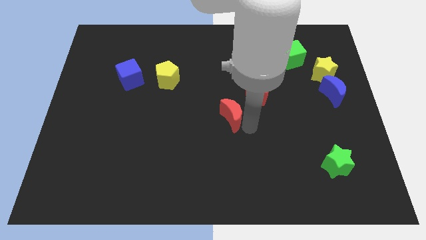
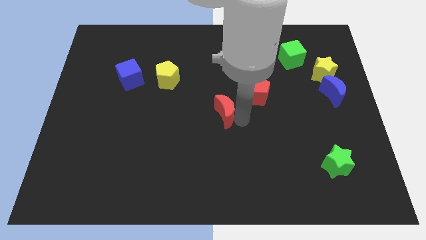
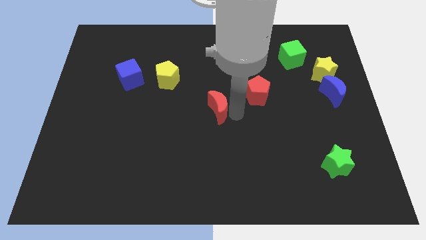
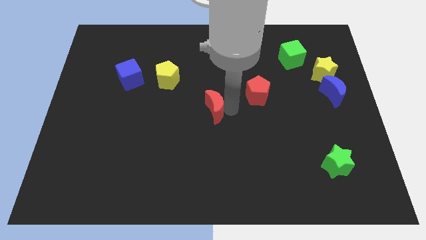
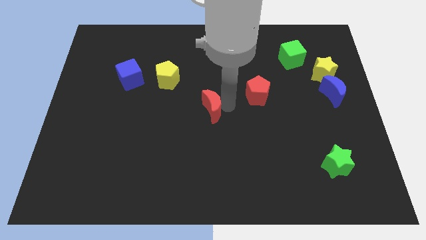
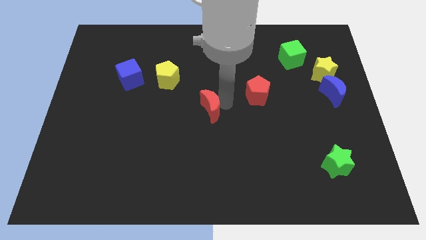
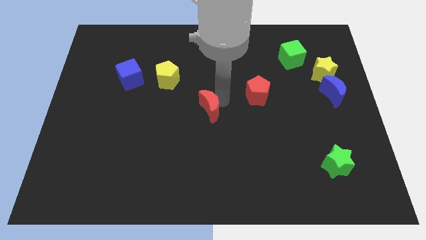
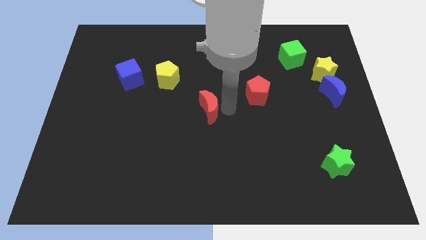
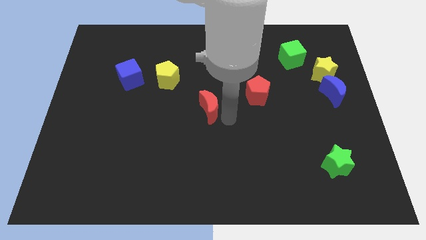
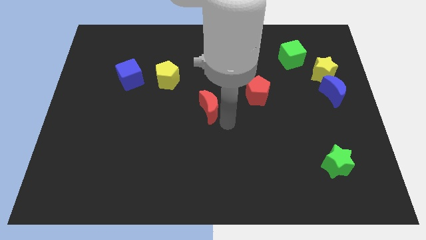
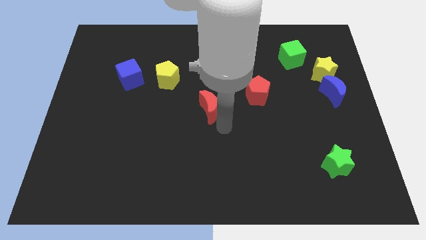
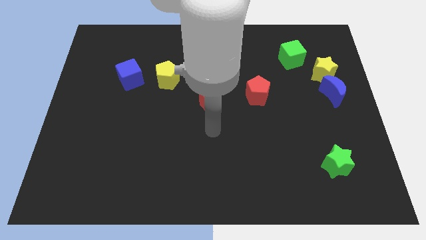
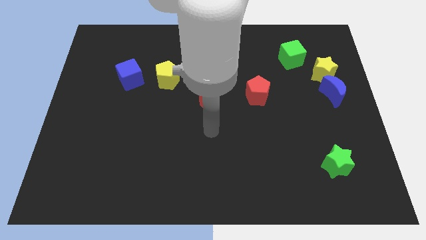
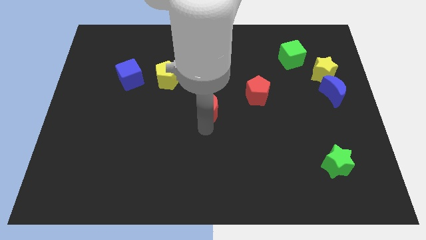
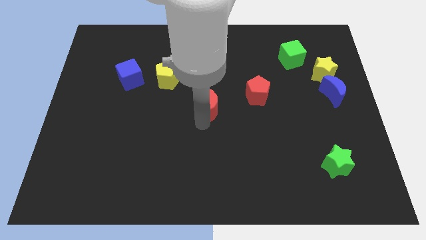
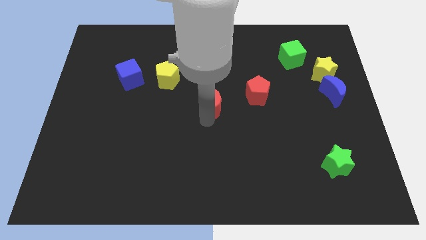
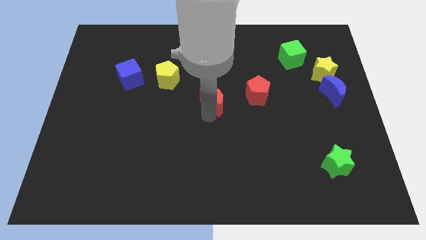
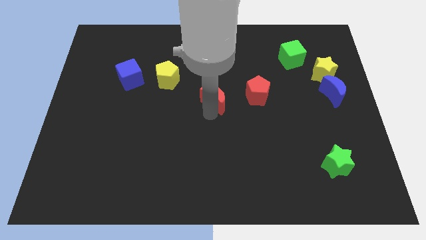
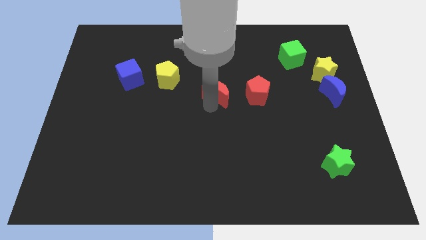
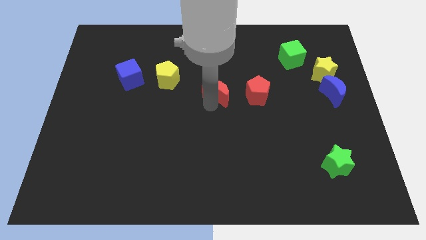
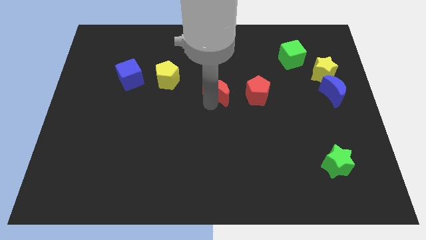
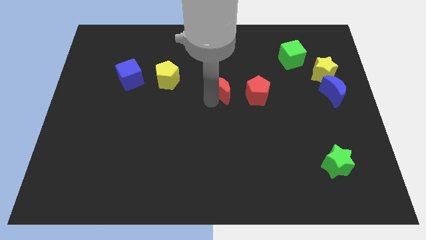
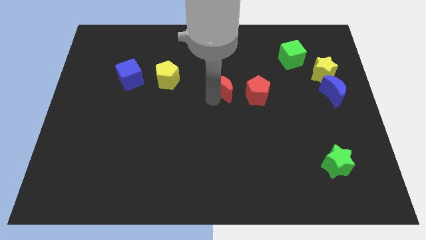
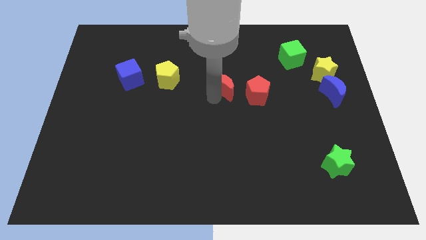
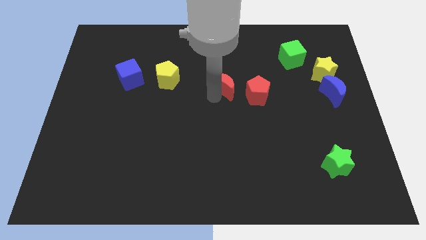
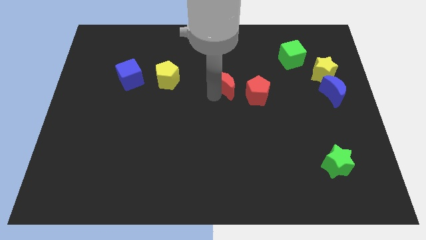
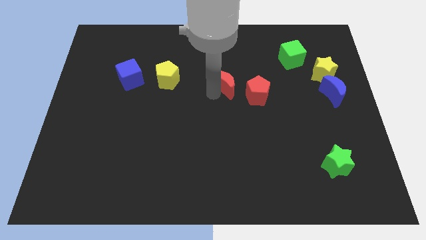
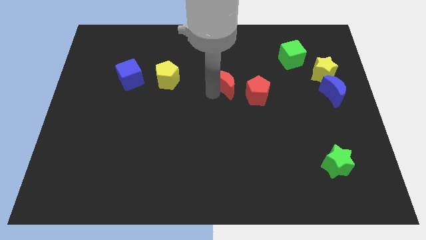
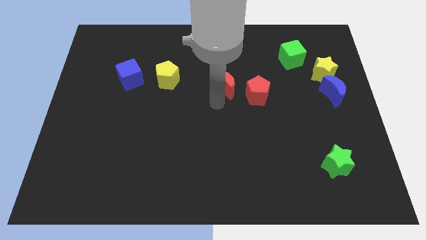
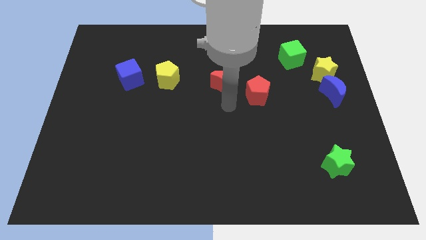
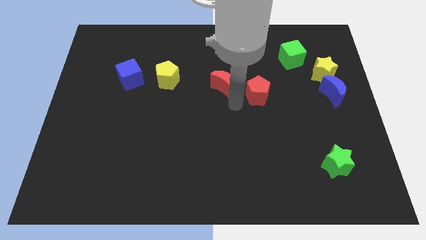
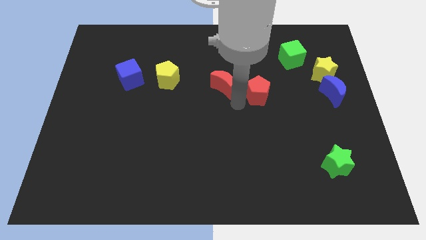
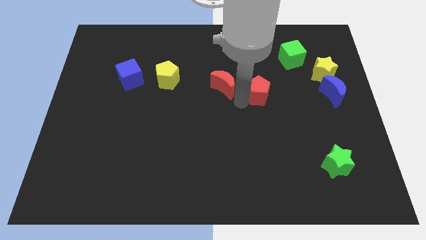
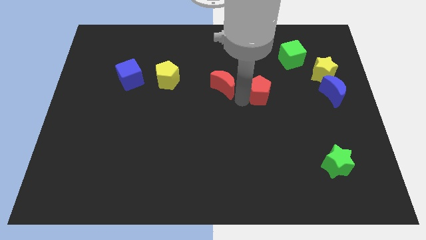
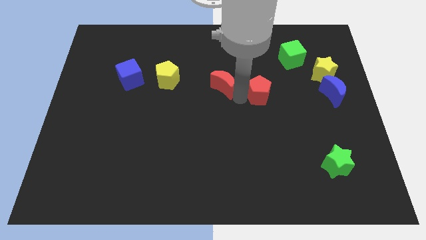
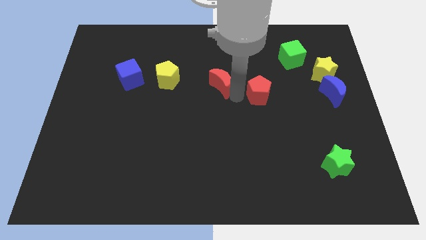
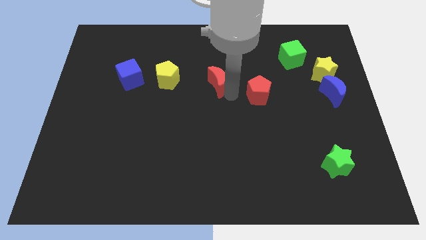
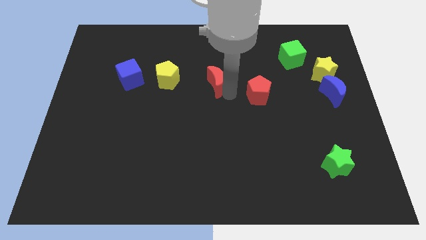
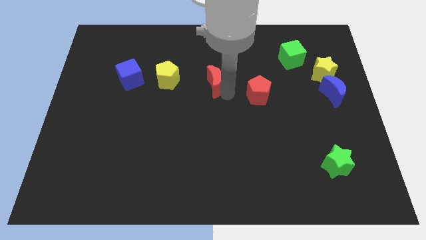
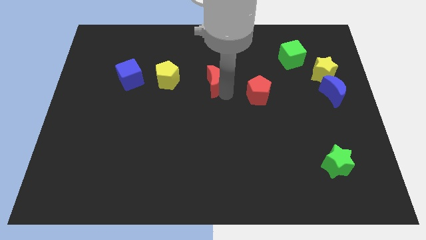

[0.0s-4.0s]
place red moon adjacent to yellow pentagon

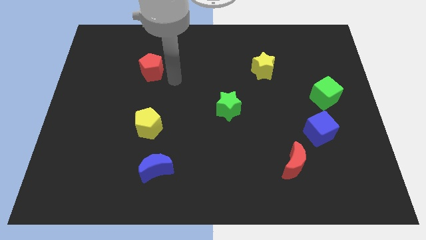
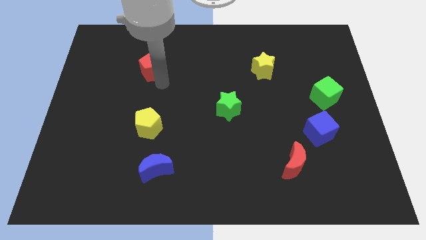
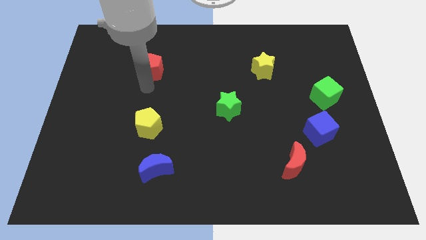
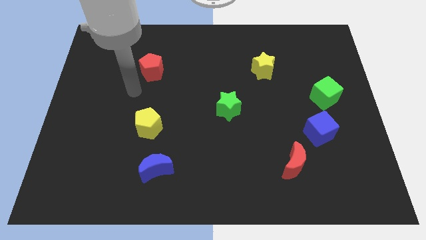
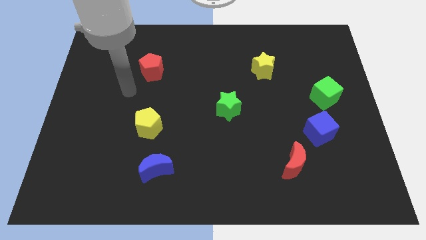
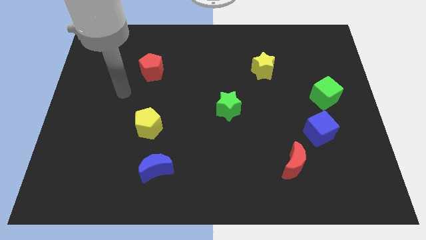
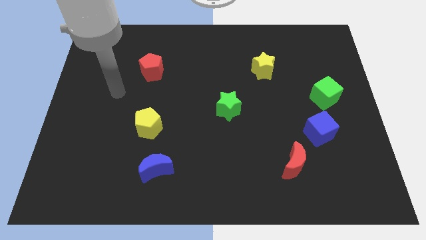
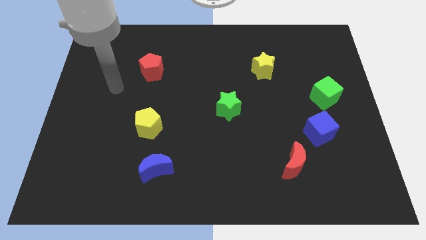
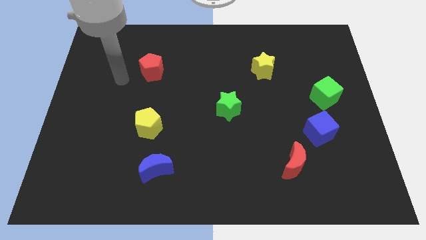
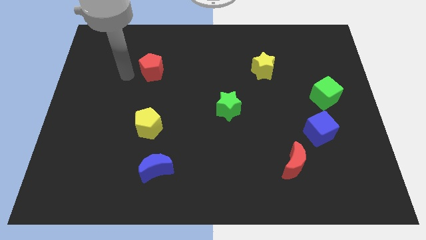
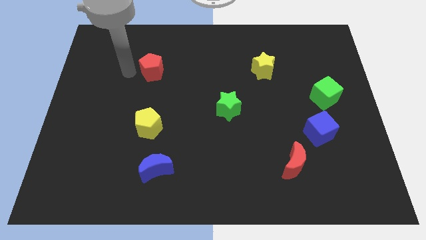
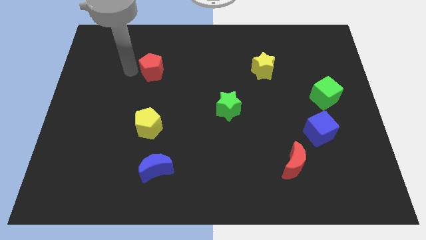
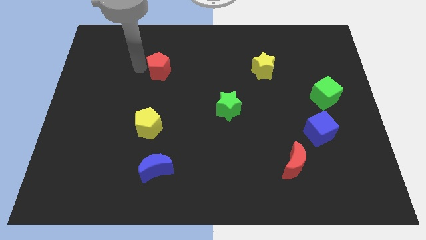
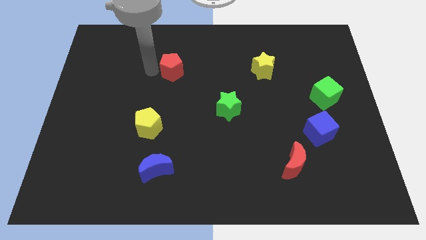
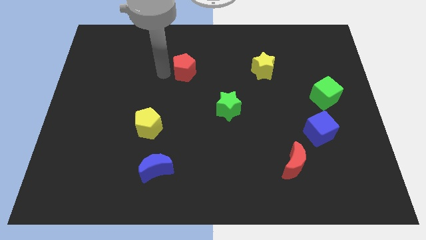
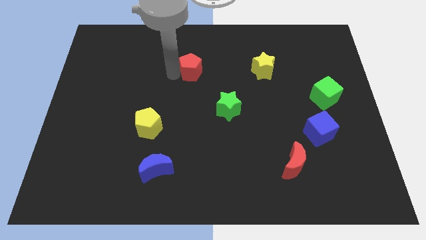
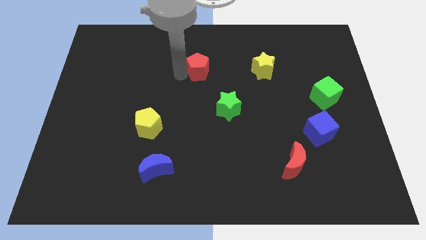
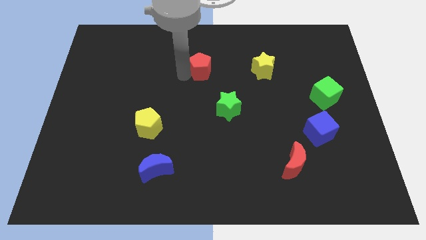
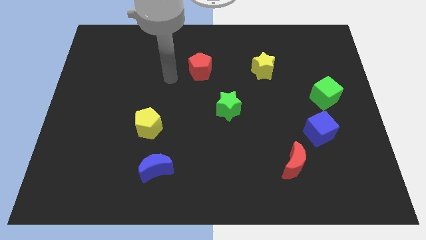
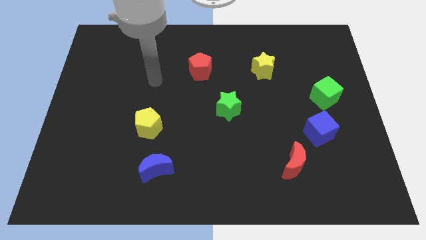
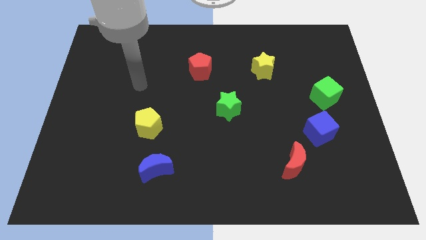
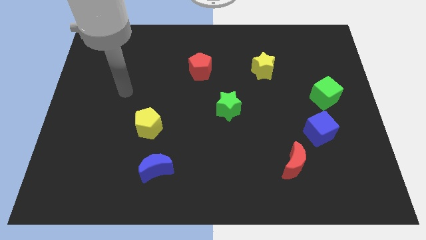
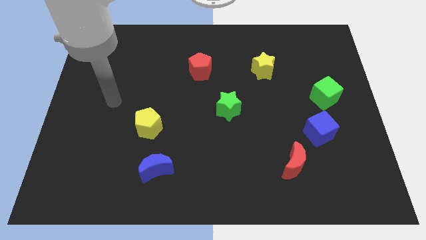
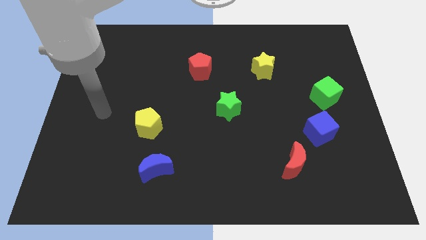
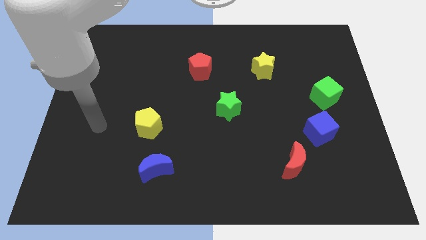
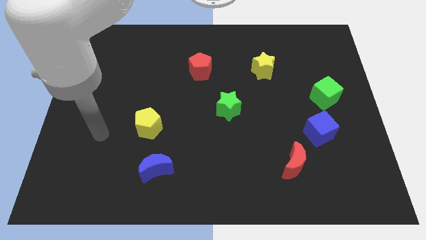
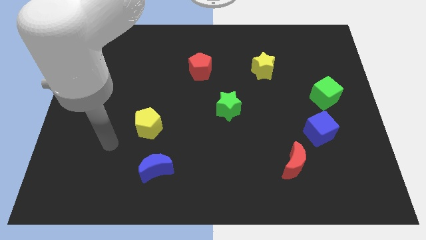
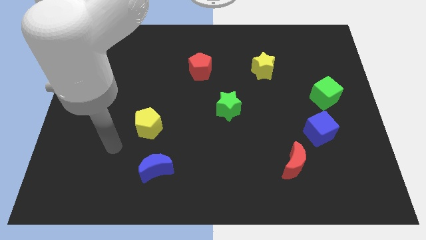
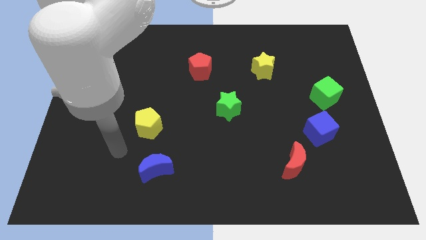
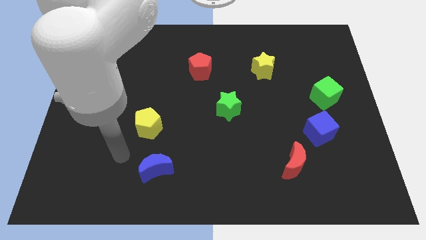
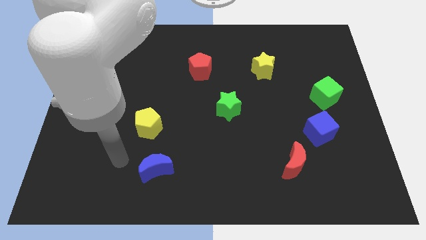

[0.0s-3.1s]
put the red pentagon and yellow star in a line horizontally

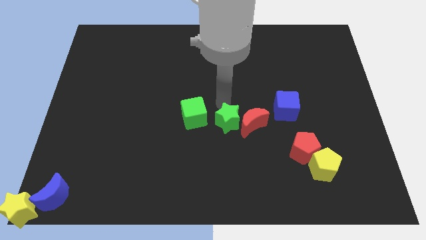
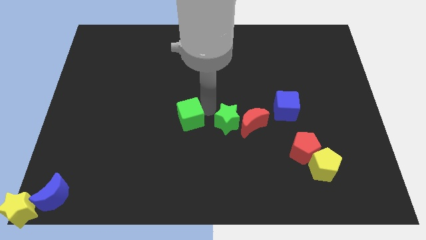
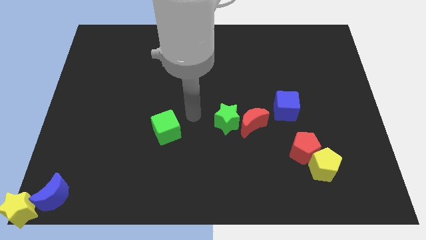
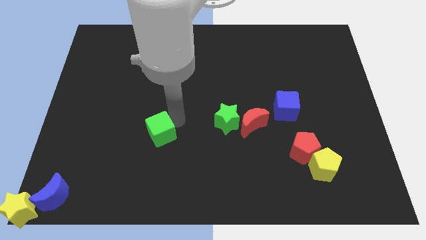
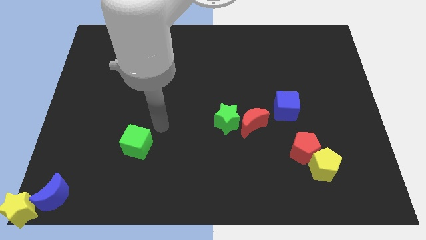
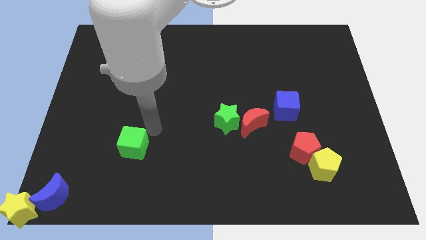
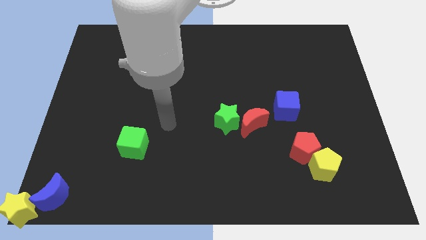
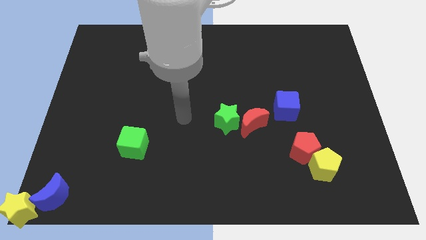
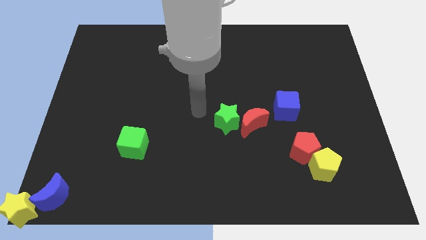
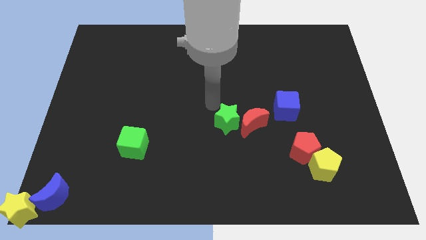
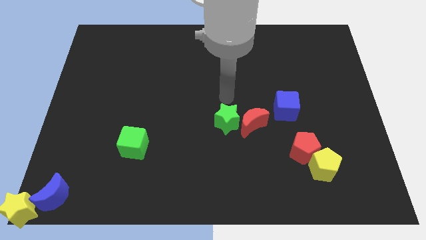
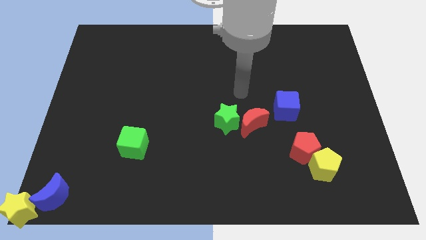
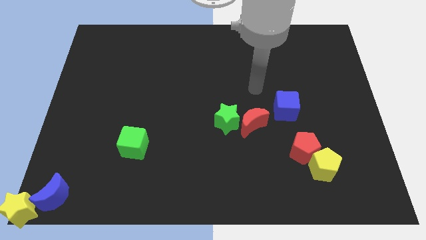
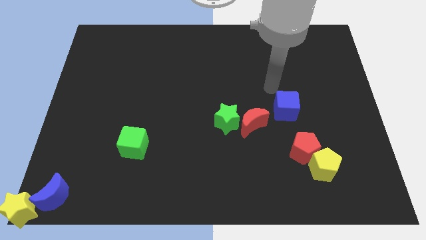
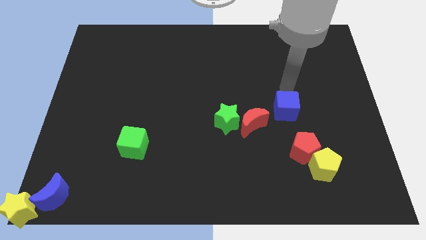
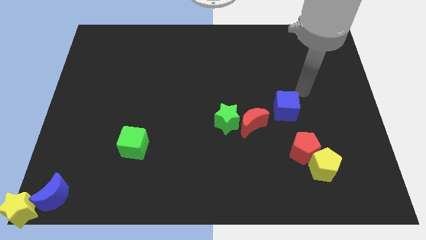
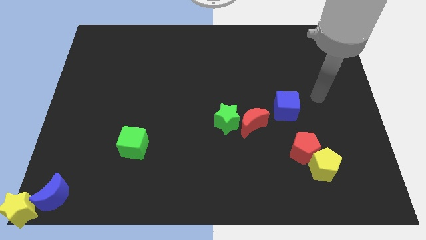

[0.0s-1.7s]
move the green cube away from the green star
